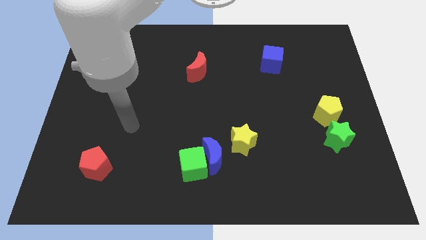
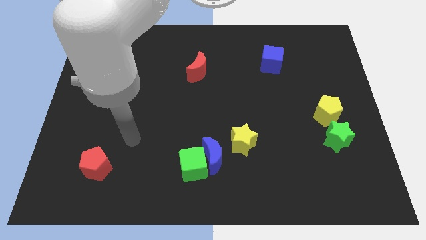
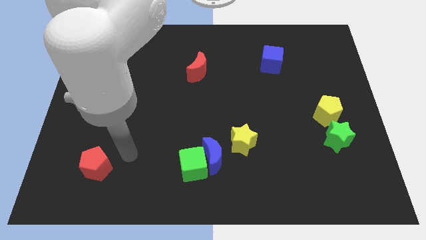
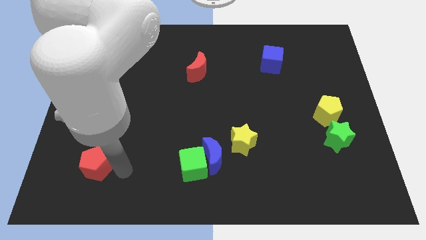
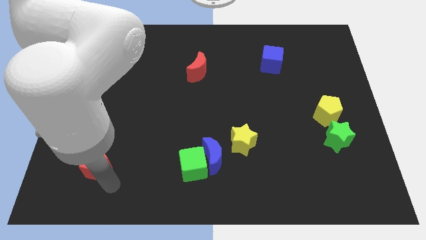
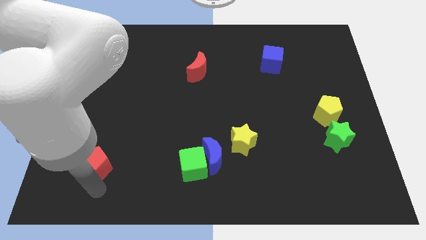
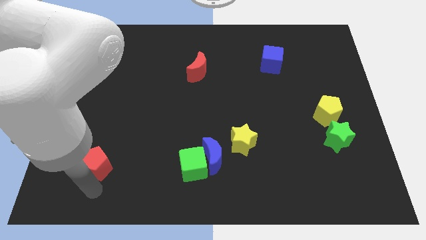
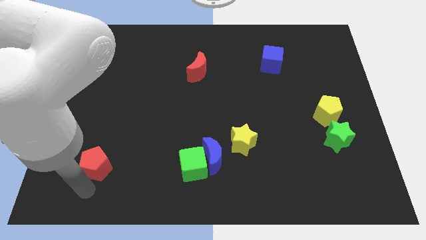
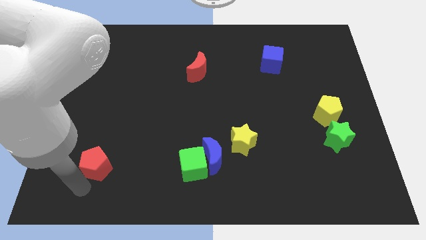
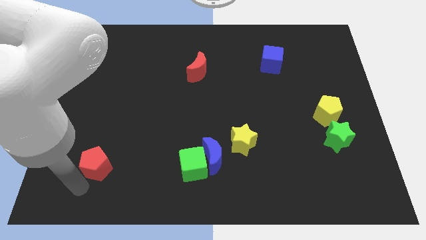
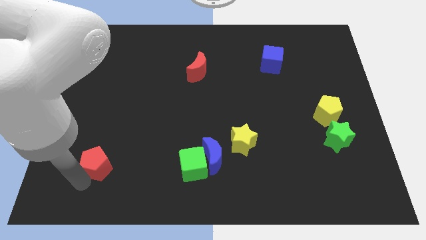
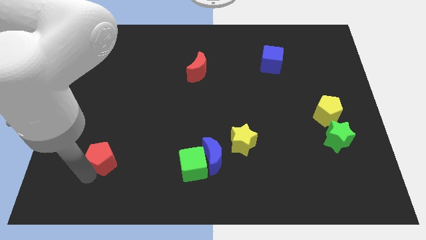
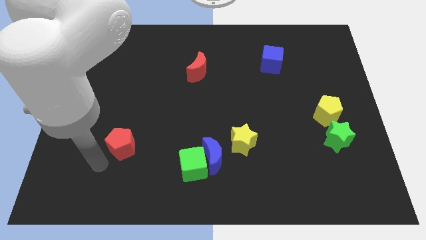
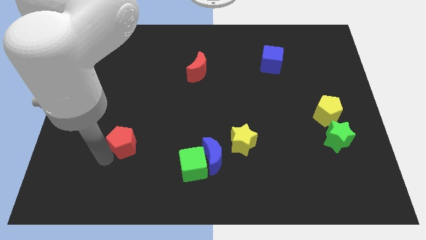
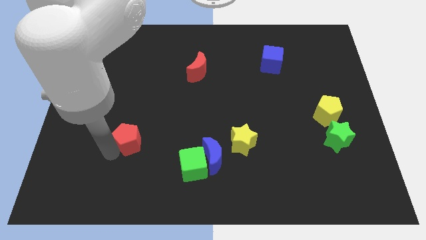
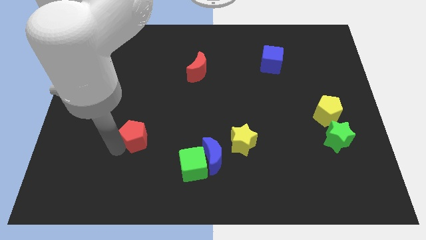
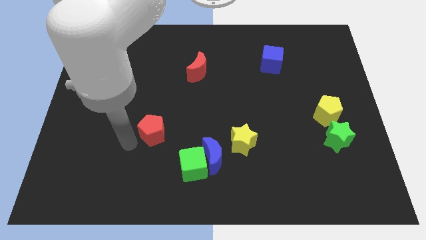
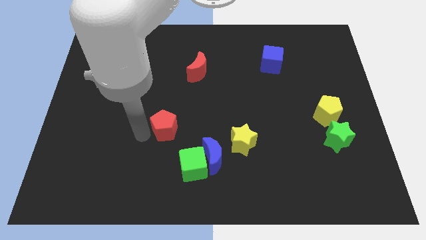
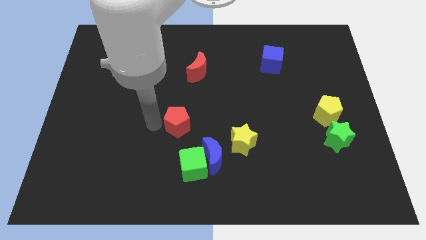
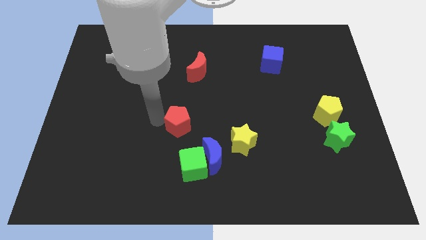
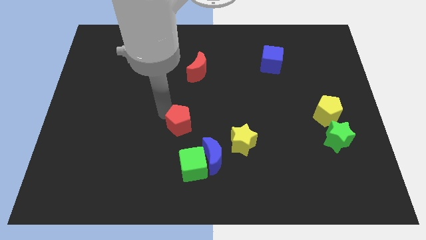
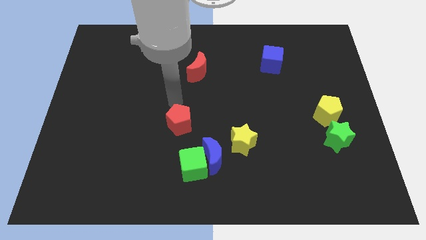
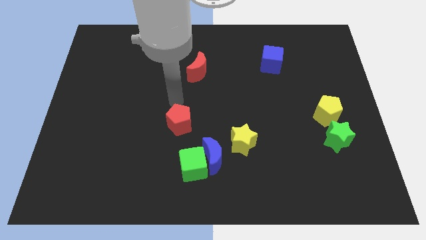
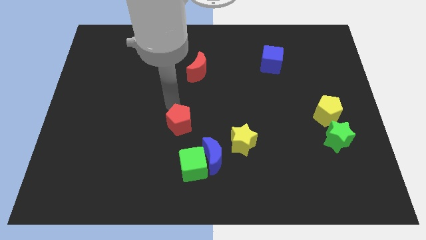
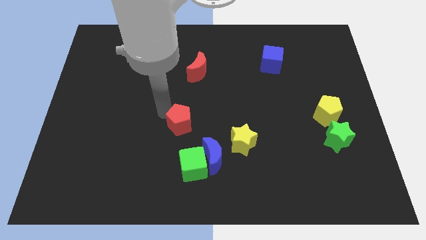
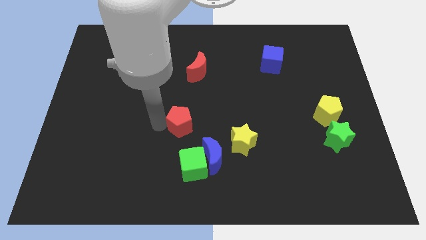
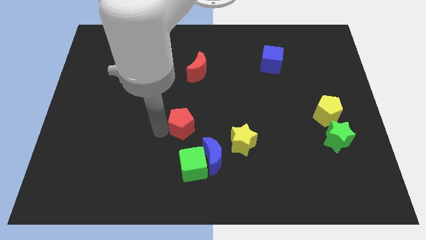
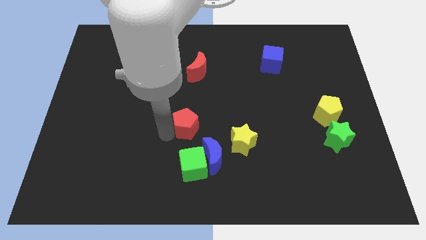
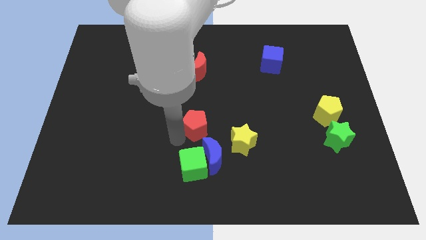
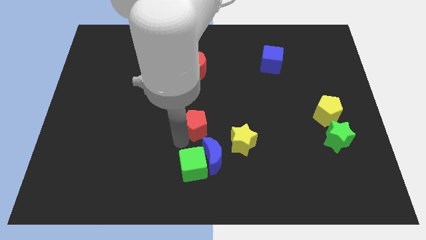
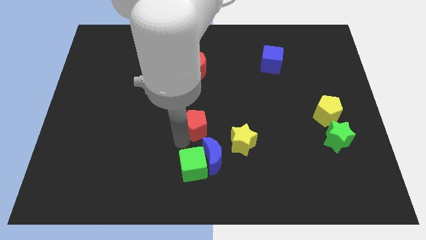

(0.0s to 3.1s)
place the red pentagon vertically above the green cube

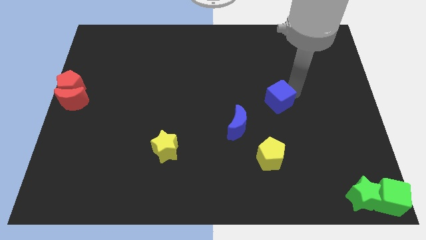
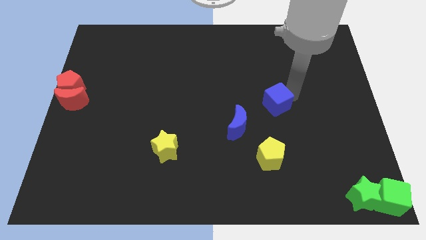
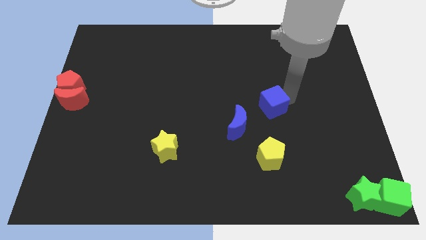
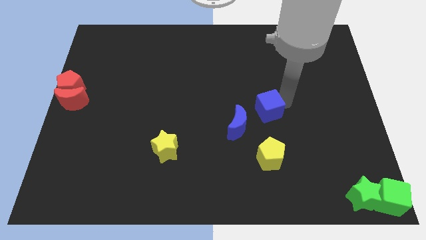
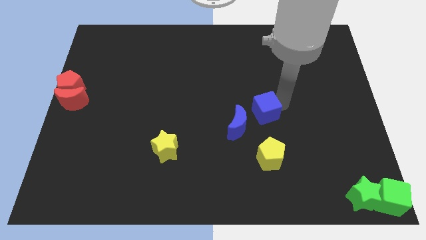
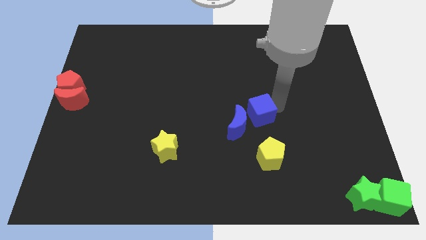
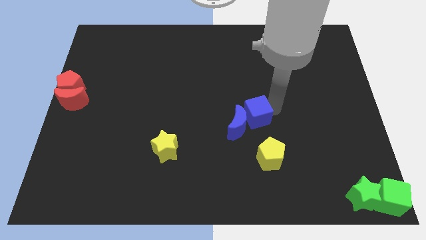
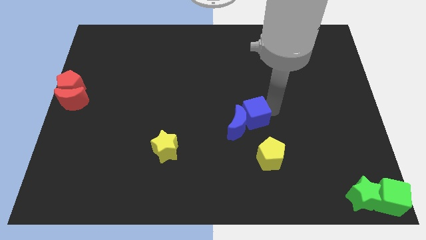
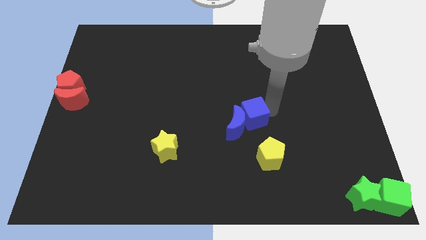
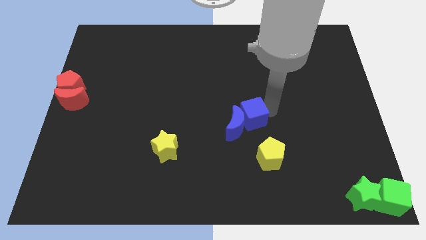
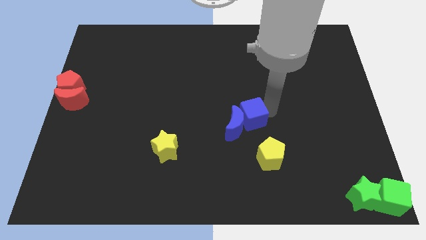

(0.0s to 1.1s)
push the blue cube into the blue crescent

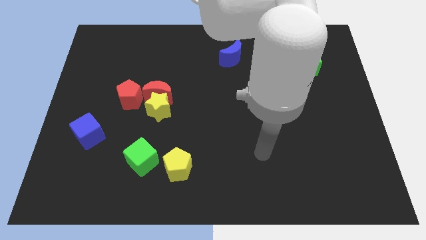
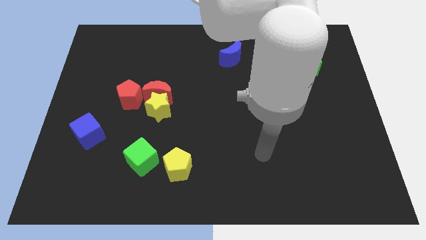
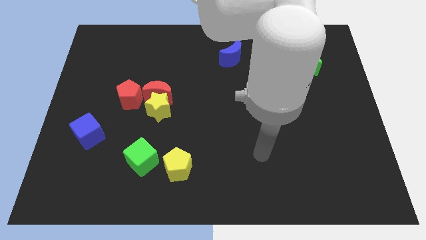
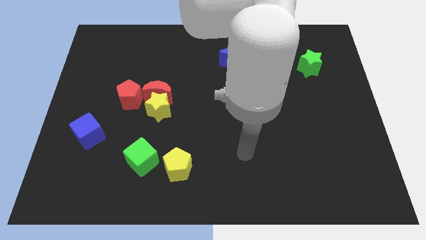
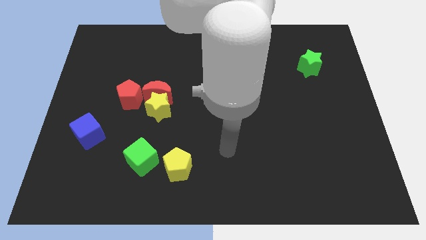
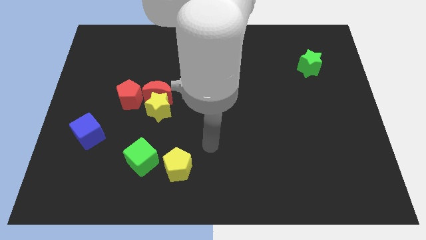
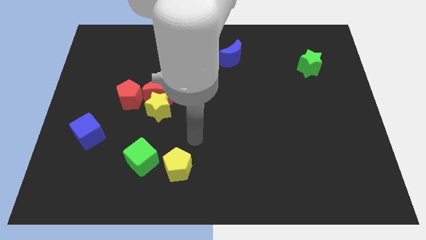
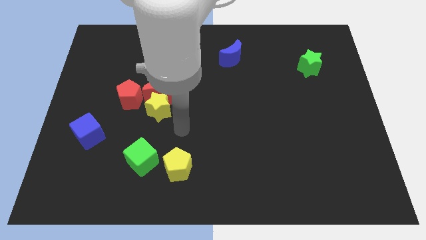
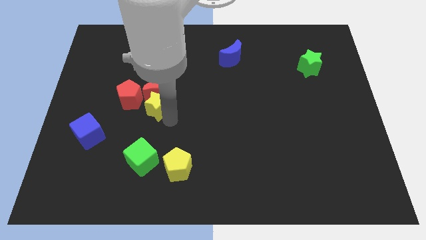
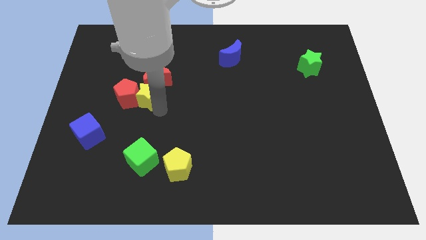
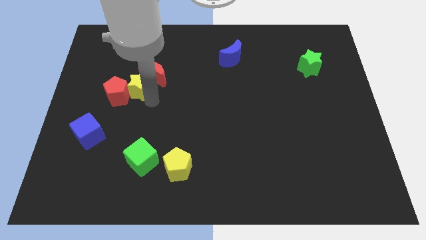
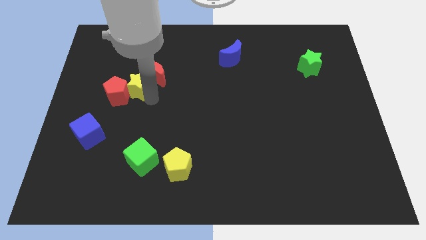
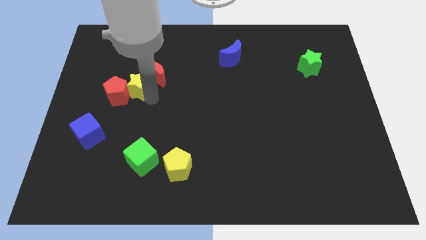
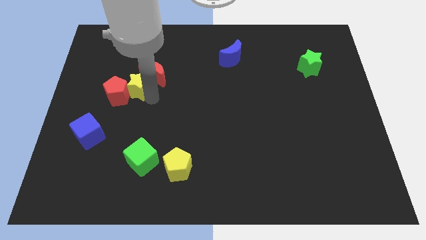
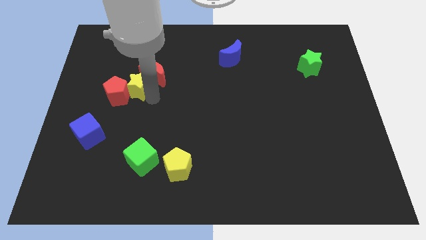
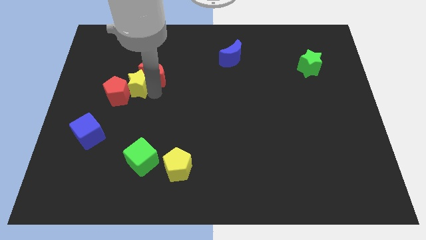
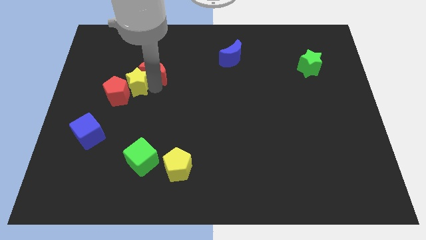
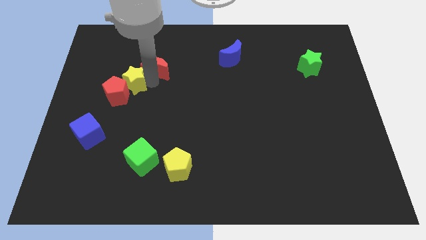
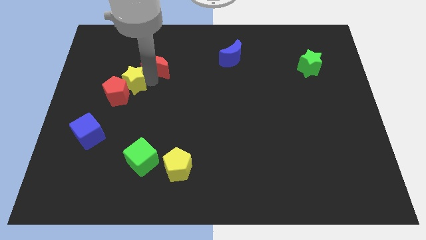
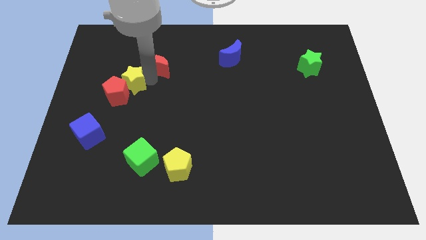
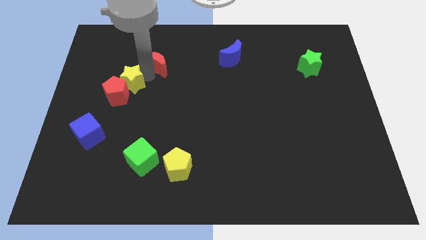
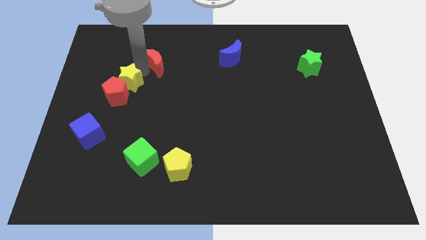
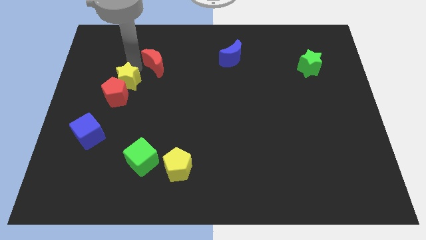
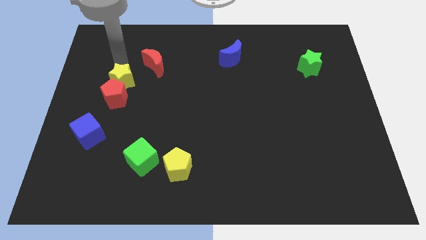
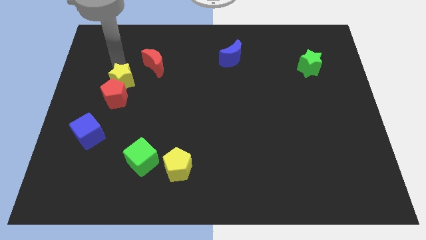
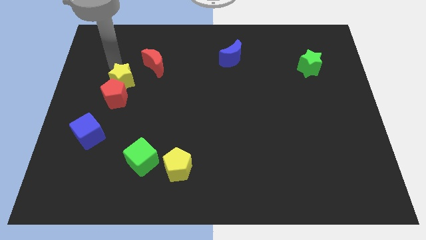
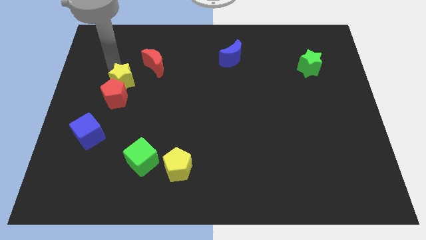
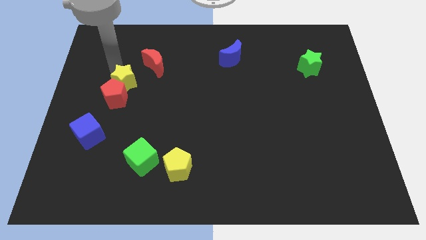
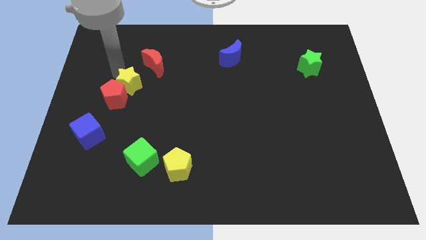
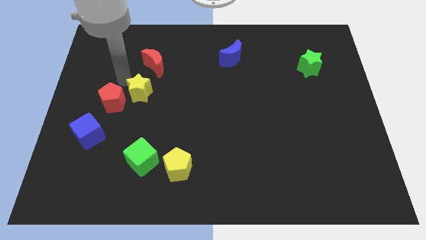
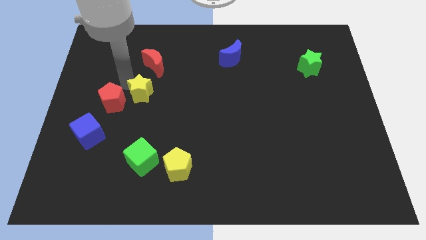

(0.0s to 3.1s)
push the yellow star between the red pentagon and red moon

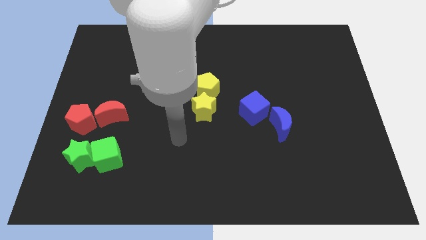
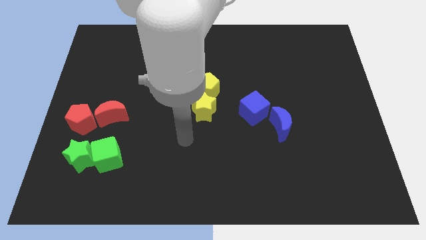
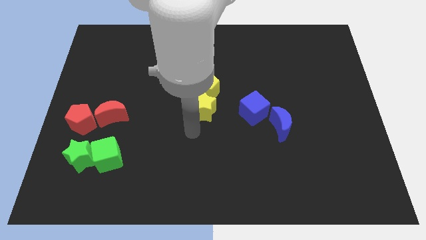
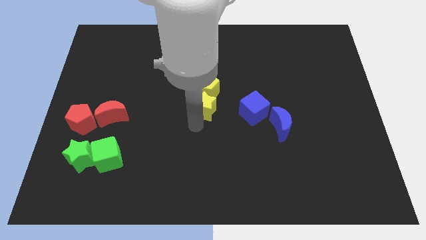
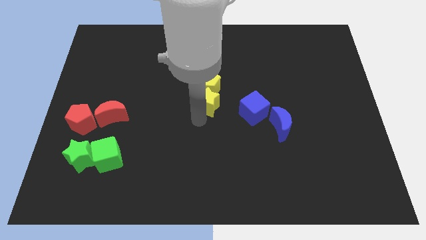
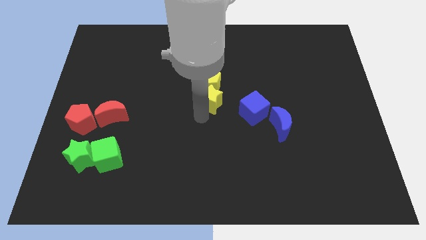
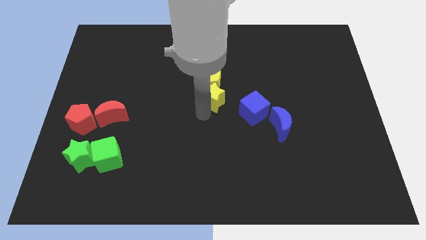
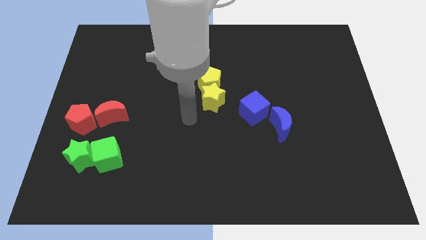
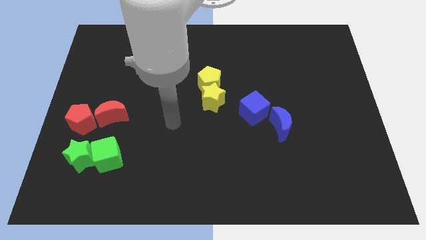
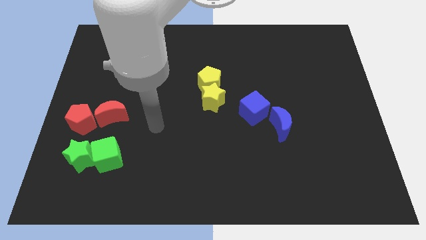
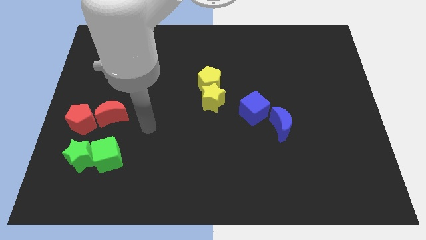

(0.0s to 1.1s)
move the yellow blocks to the center of the board

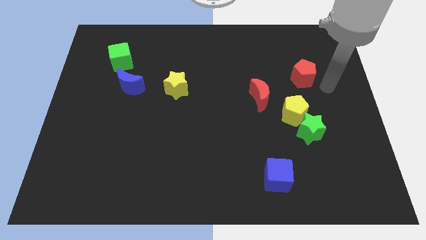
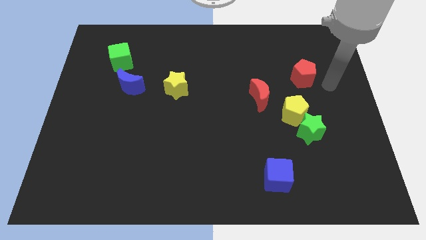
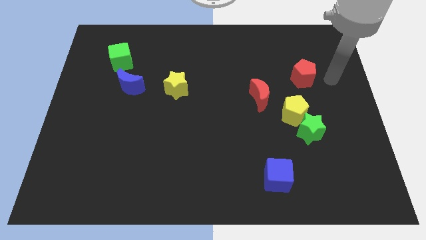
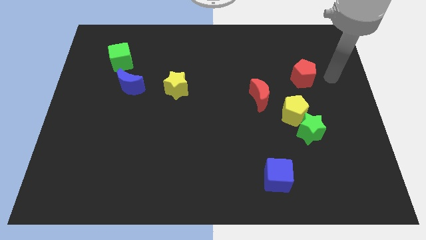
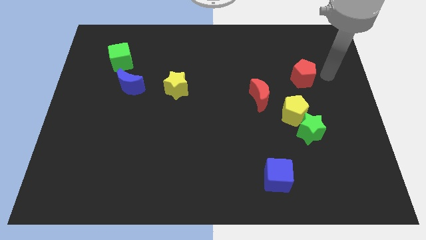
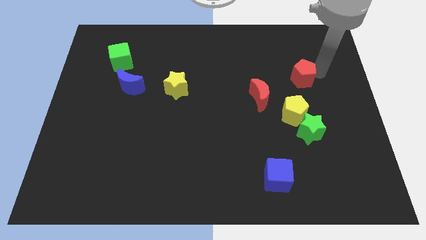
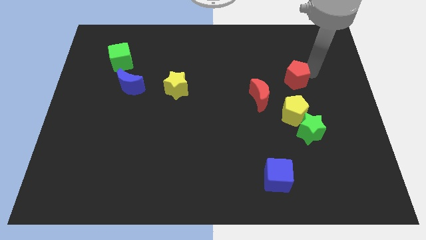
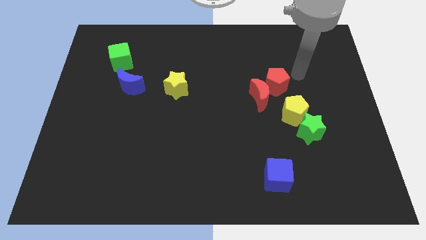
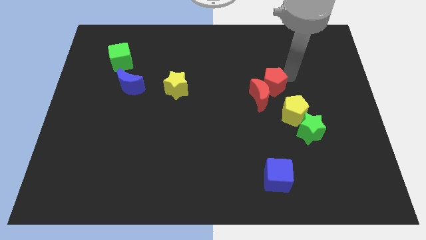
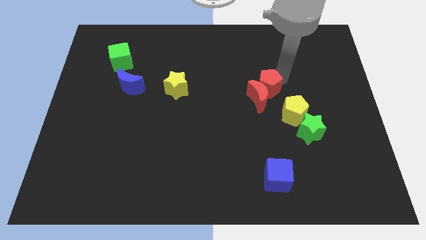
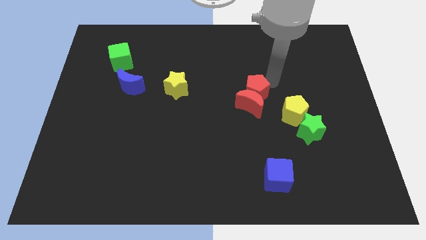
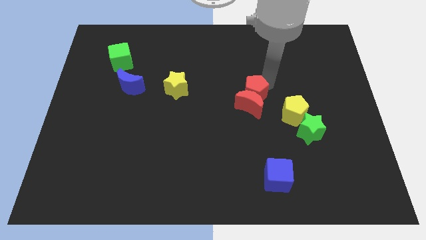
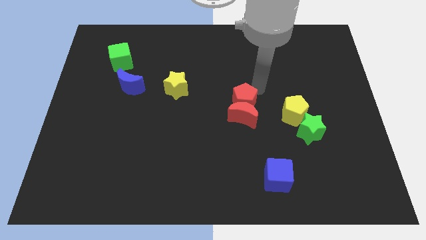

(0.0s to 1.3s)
push the red pentagon into the red moon
